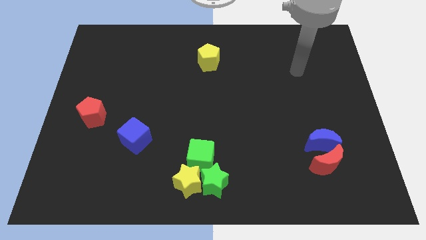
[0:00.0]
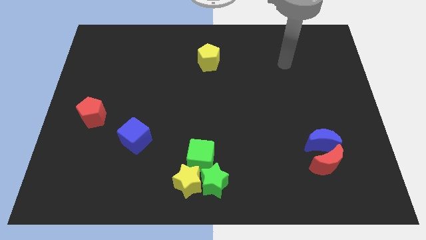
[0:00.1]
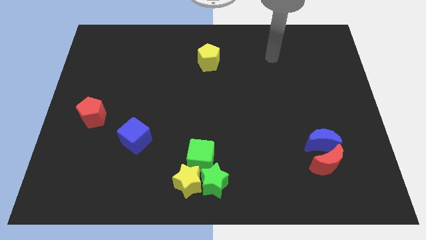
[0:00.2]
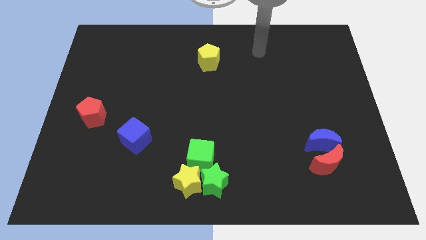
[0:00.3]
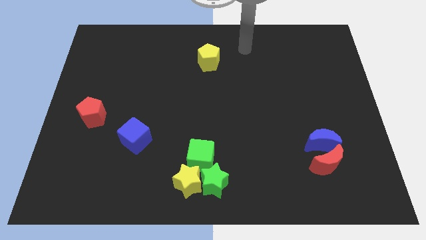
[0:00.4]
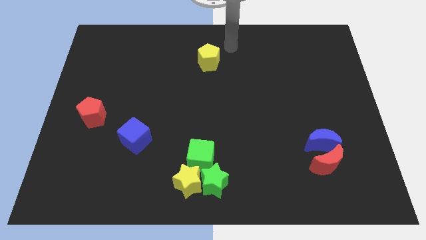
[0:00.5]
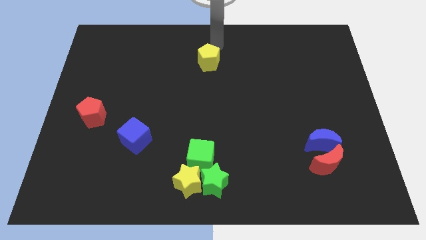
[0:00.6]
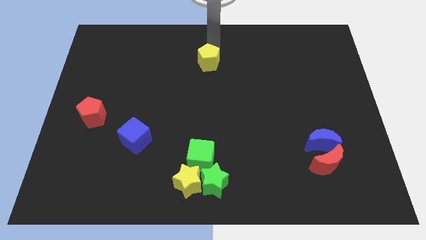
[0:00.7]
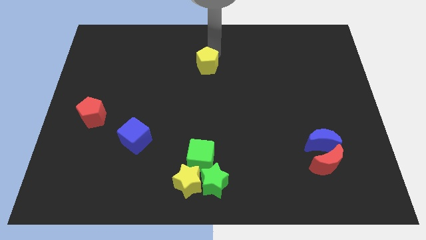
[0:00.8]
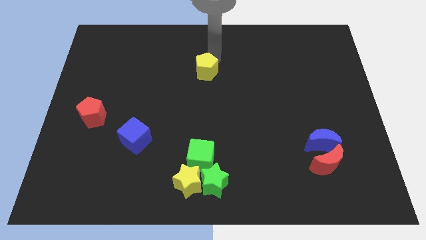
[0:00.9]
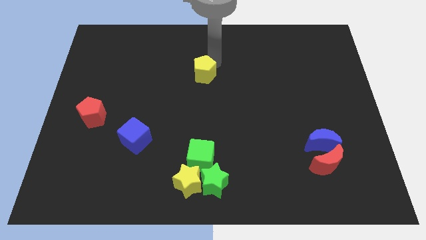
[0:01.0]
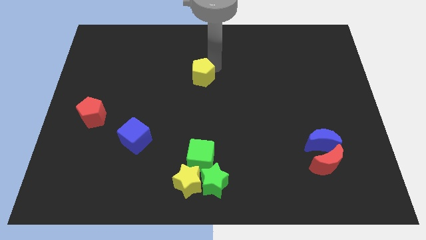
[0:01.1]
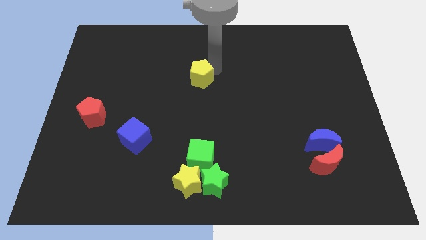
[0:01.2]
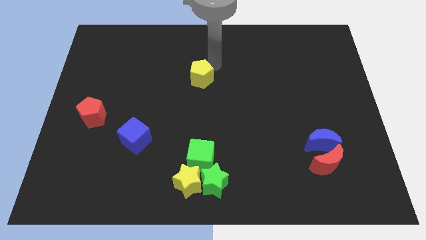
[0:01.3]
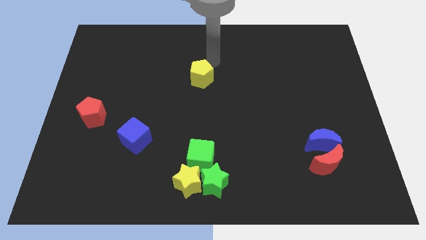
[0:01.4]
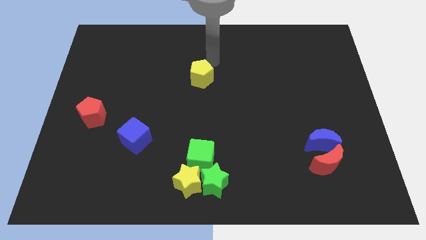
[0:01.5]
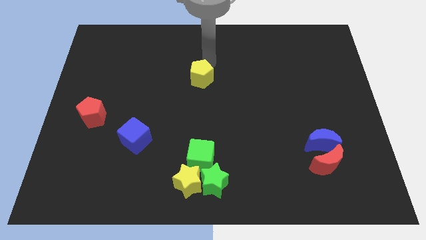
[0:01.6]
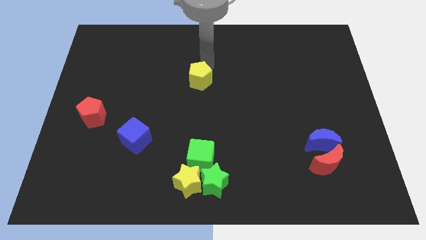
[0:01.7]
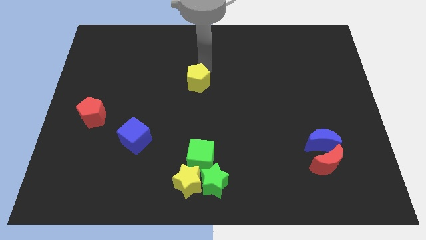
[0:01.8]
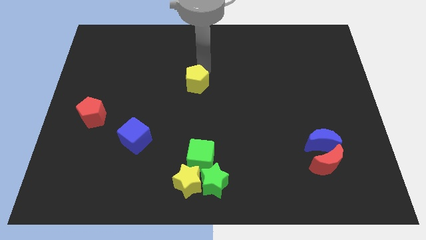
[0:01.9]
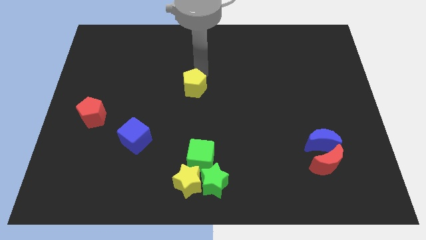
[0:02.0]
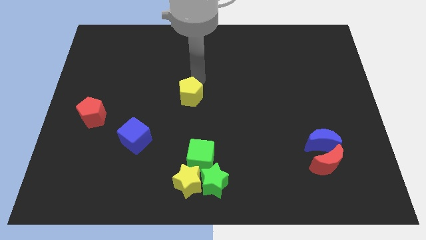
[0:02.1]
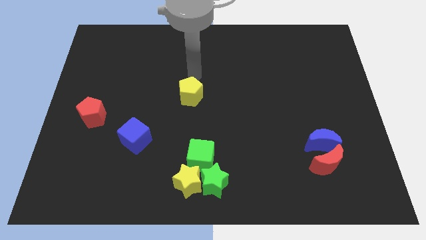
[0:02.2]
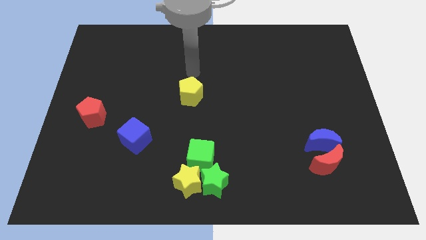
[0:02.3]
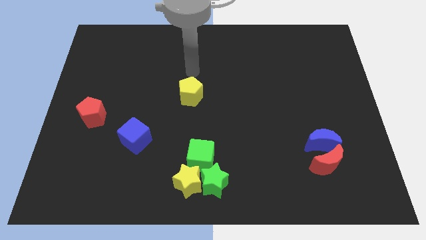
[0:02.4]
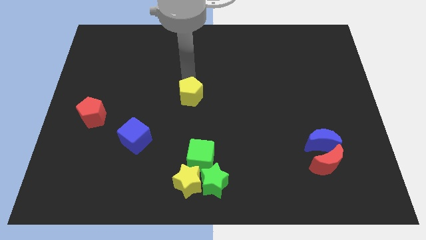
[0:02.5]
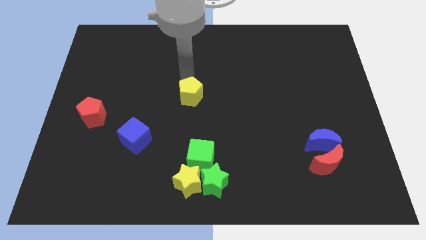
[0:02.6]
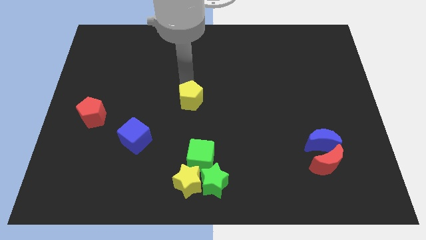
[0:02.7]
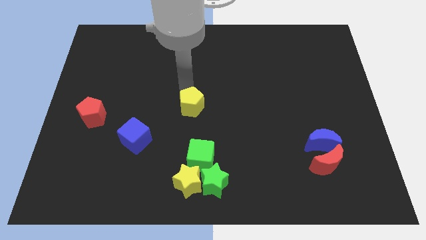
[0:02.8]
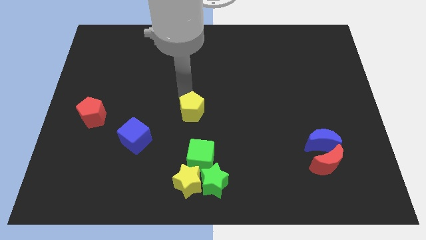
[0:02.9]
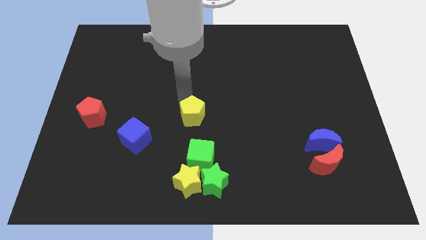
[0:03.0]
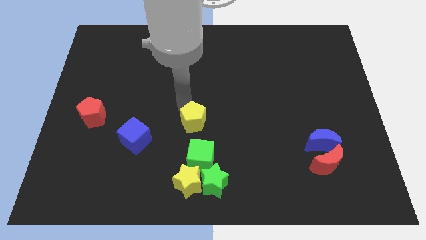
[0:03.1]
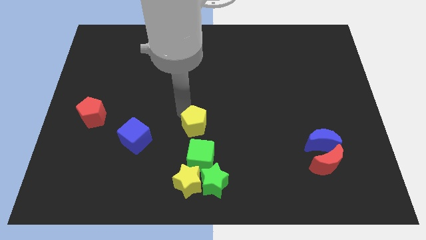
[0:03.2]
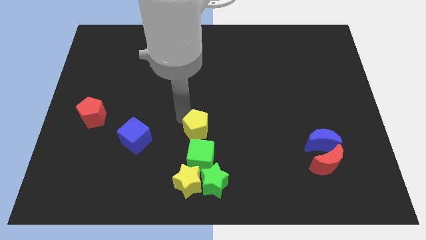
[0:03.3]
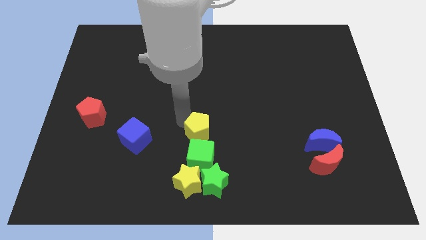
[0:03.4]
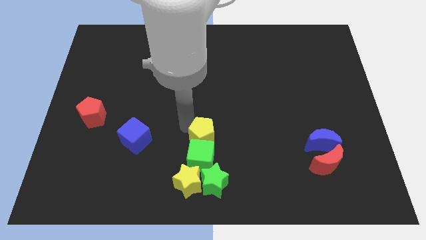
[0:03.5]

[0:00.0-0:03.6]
place the yellow pentagon at the top of green cube

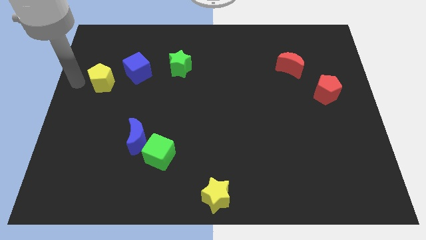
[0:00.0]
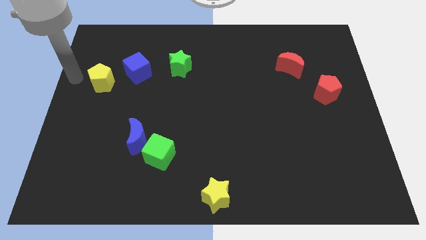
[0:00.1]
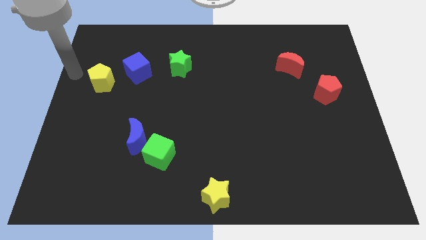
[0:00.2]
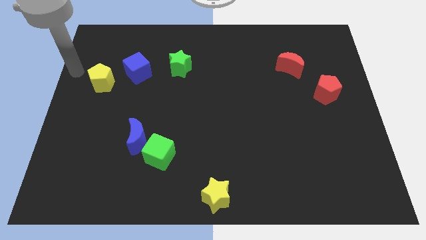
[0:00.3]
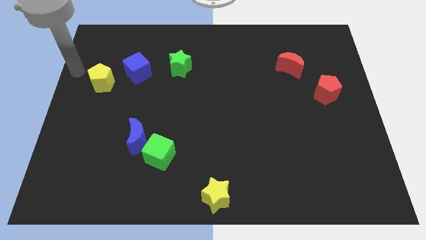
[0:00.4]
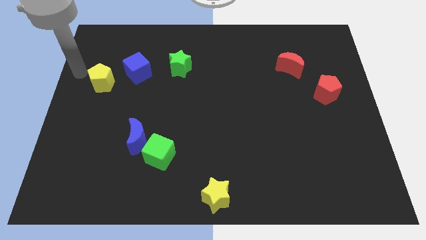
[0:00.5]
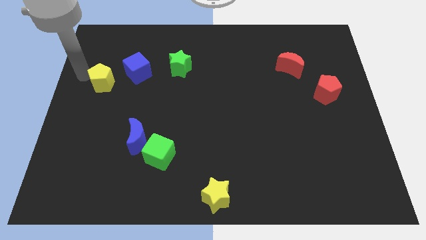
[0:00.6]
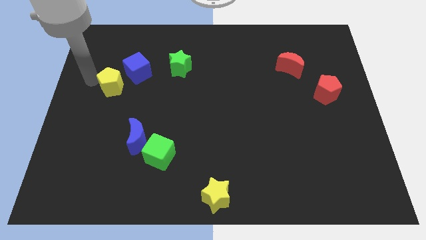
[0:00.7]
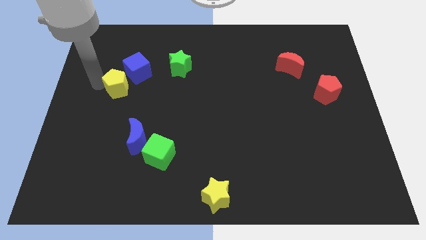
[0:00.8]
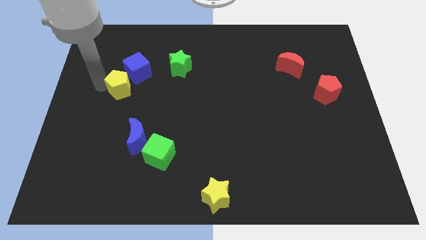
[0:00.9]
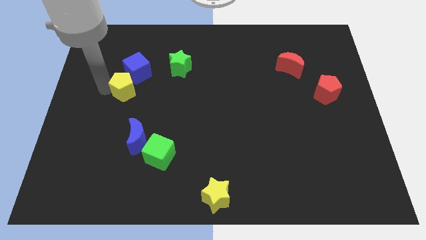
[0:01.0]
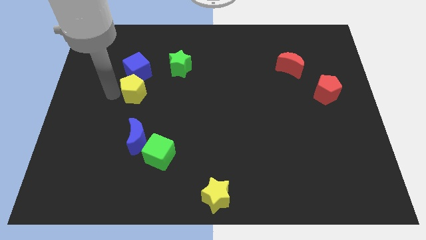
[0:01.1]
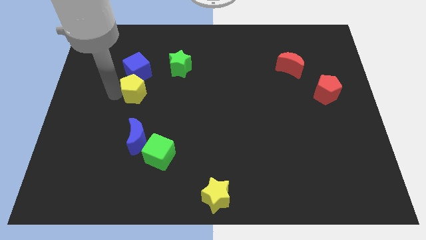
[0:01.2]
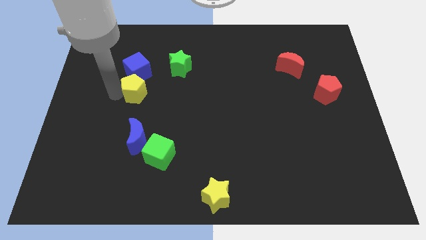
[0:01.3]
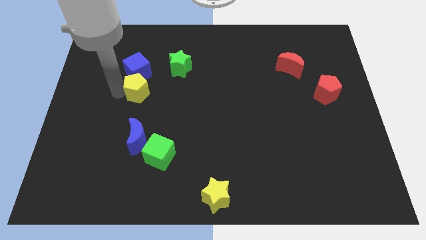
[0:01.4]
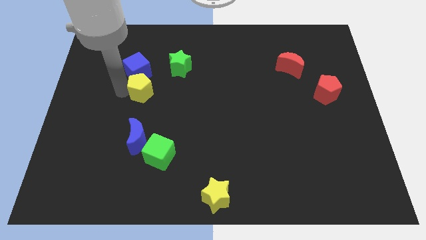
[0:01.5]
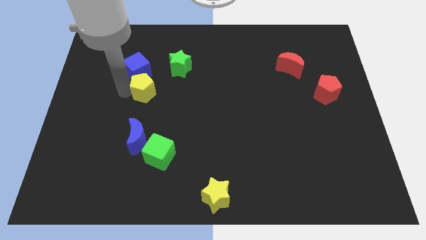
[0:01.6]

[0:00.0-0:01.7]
place the yellow pentagon below the blue cube

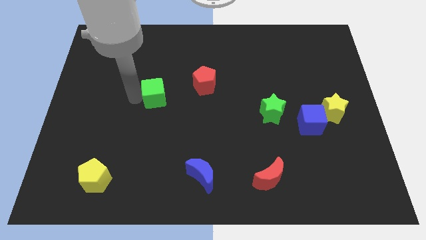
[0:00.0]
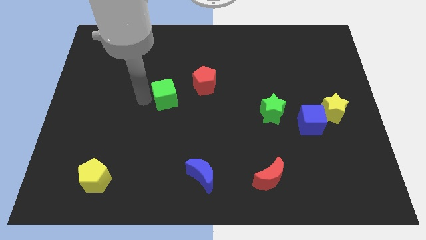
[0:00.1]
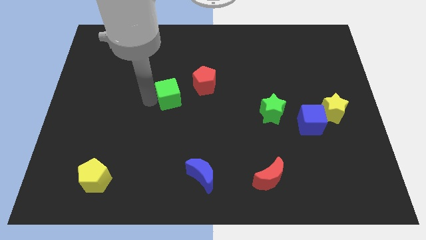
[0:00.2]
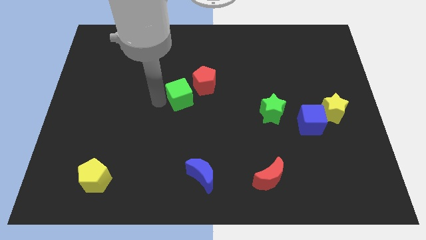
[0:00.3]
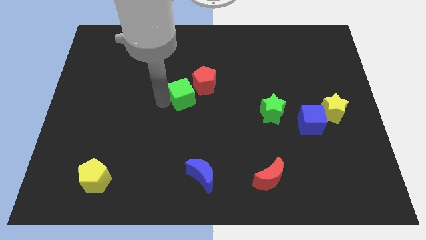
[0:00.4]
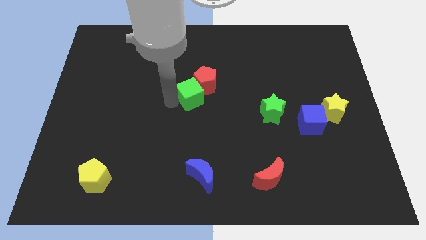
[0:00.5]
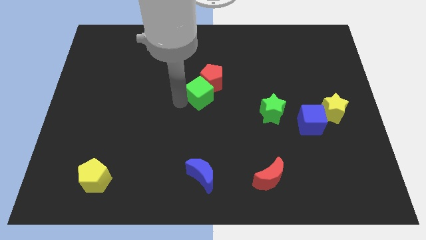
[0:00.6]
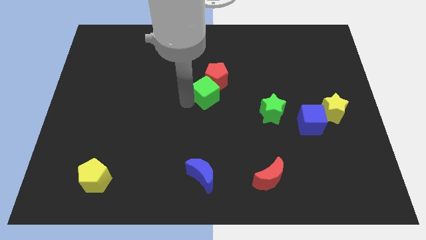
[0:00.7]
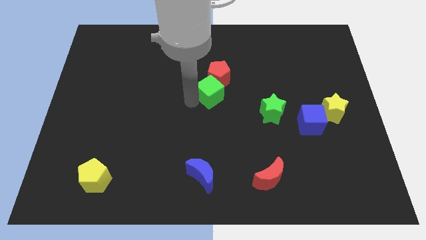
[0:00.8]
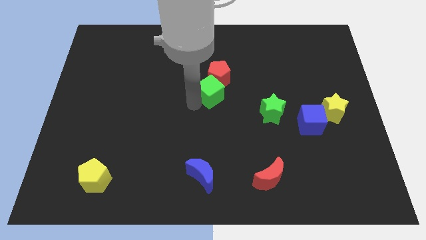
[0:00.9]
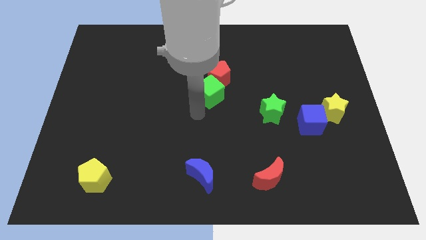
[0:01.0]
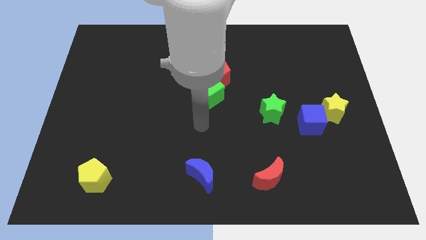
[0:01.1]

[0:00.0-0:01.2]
push green cube in to red pentagon

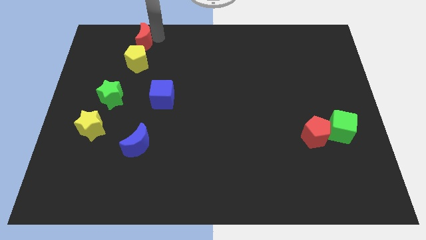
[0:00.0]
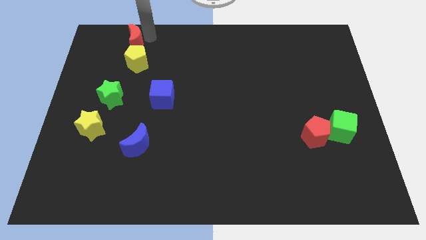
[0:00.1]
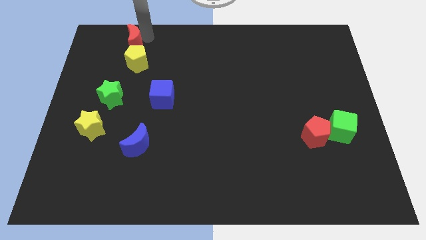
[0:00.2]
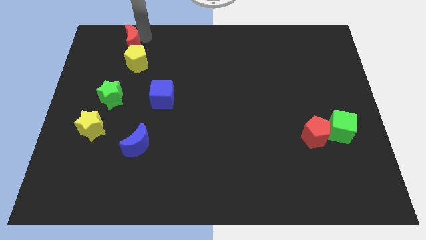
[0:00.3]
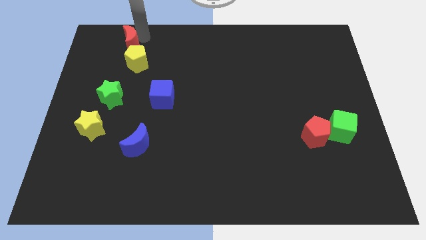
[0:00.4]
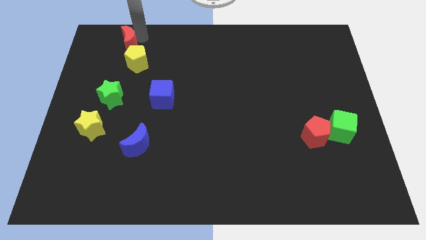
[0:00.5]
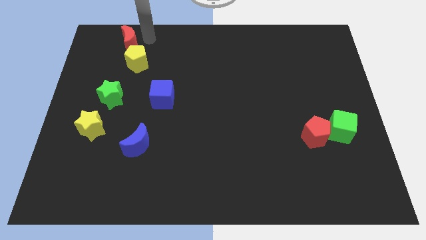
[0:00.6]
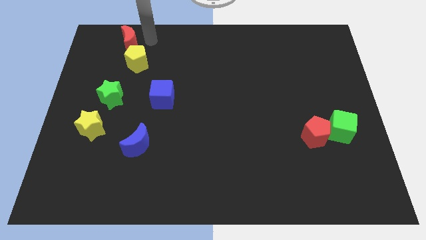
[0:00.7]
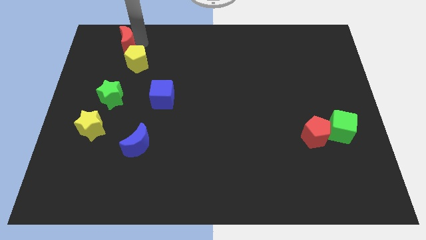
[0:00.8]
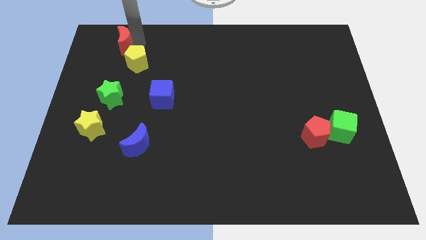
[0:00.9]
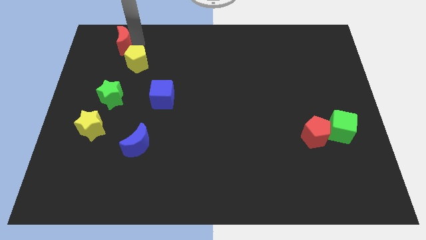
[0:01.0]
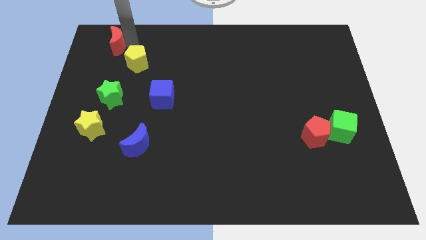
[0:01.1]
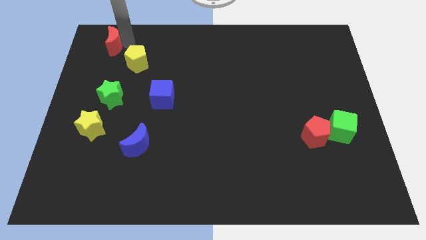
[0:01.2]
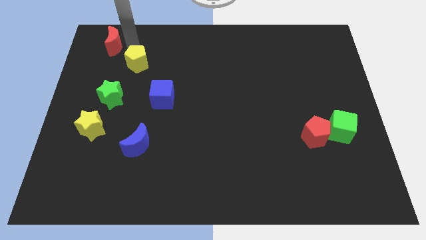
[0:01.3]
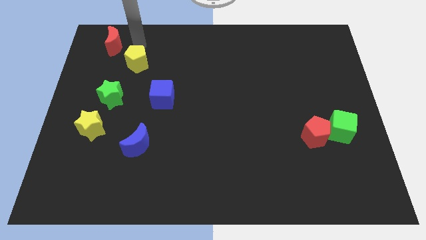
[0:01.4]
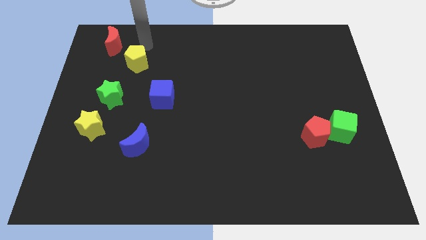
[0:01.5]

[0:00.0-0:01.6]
push the red moon to the top left side of the yellow pentagon

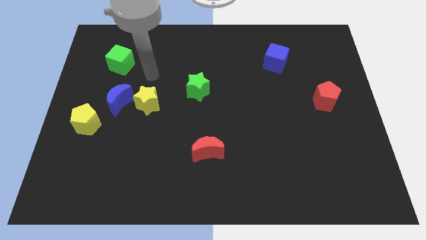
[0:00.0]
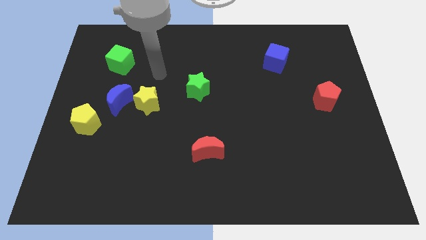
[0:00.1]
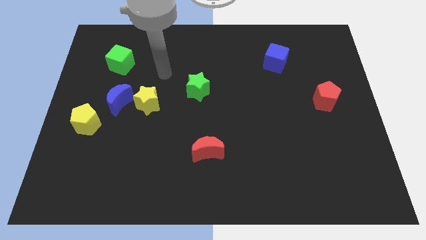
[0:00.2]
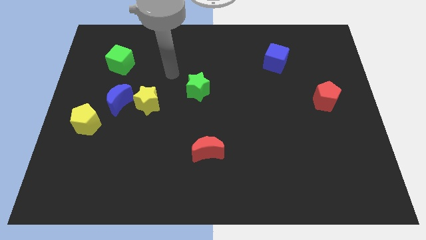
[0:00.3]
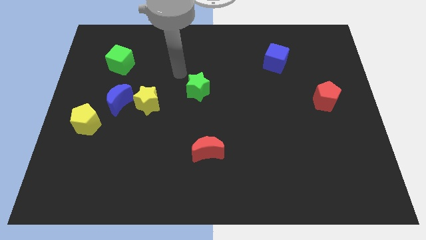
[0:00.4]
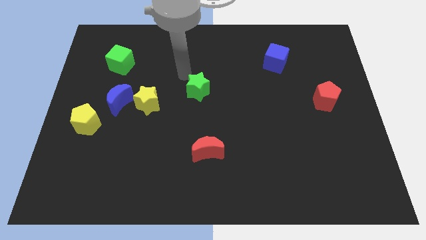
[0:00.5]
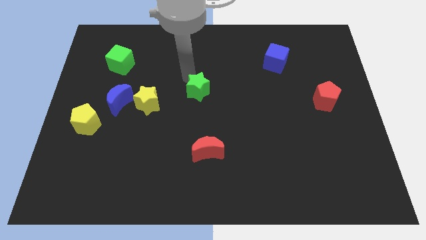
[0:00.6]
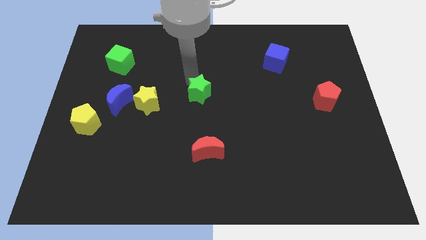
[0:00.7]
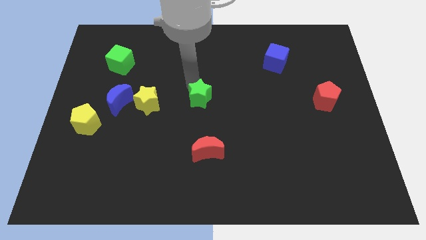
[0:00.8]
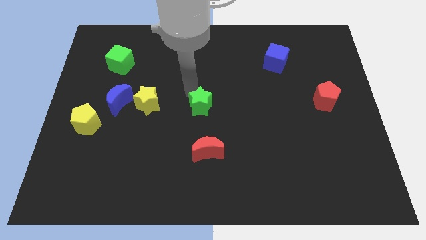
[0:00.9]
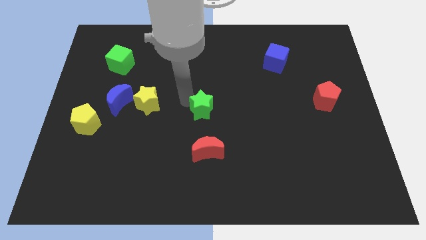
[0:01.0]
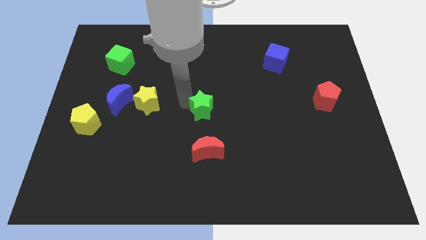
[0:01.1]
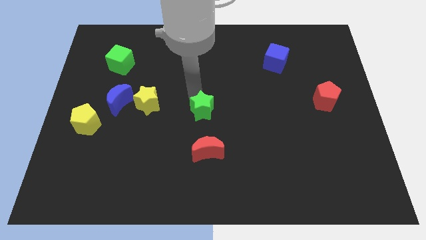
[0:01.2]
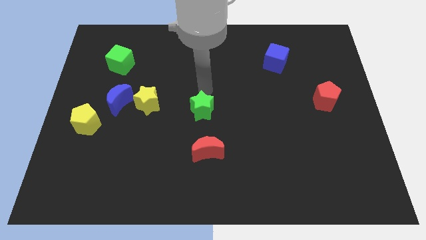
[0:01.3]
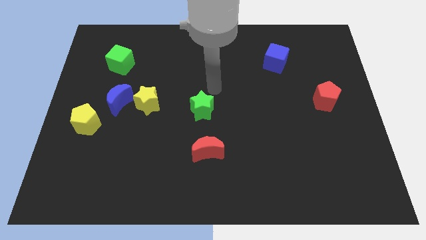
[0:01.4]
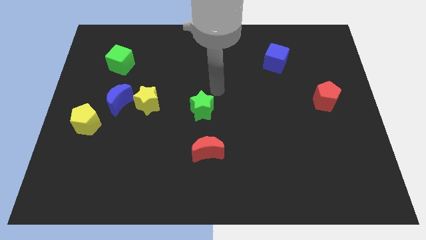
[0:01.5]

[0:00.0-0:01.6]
push the green star towards the red crescent
